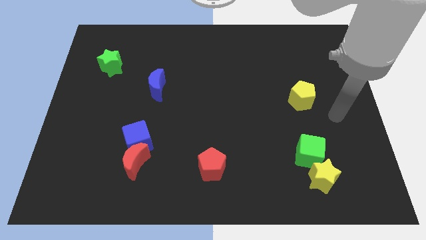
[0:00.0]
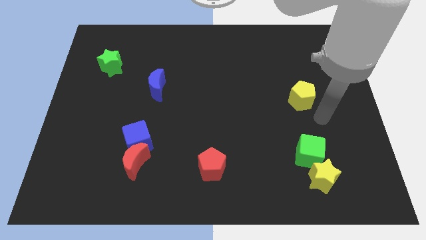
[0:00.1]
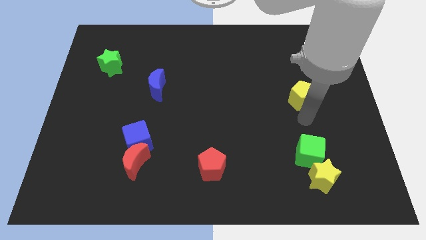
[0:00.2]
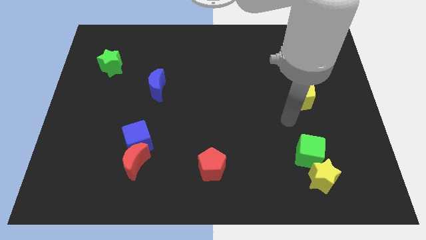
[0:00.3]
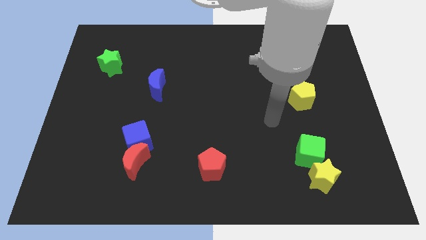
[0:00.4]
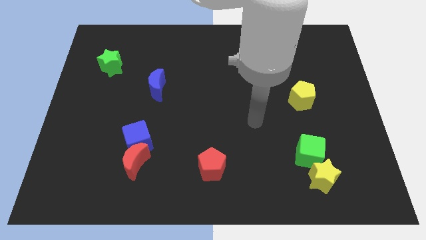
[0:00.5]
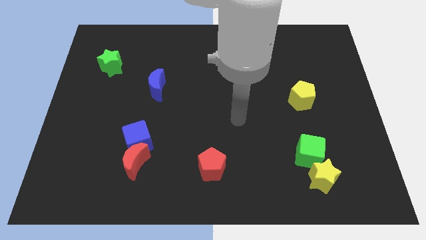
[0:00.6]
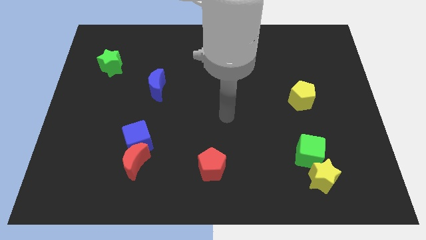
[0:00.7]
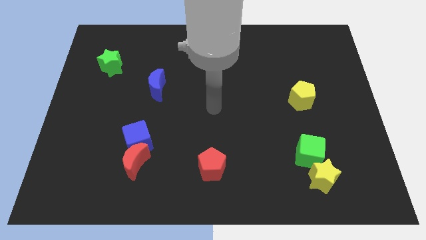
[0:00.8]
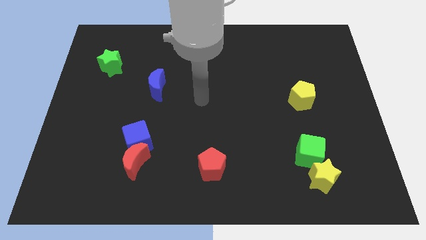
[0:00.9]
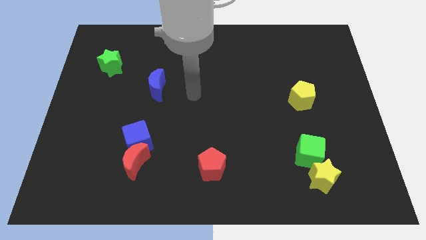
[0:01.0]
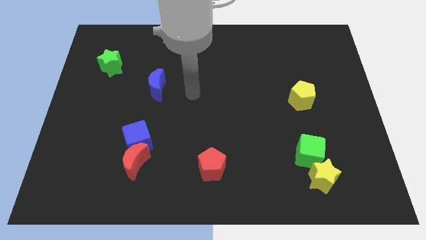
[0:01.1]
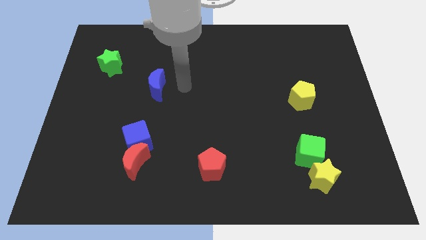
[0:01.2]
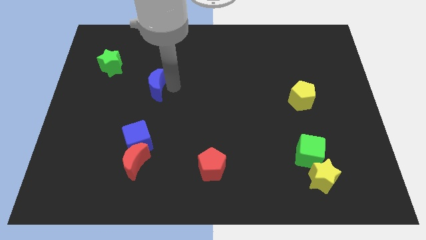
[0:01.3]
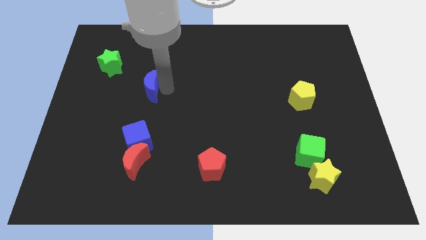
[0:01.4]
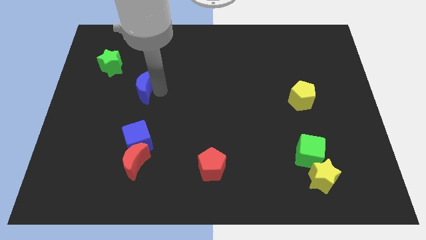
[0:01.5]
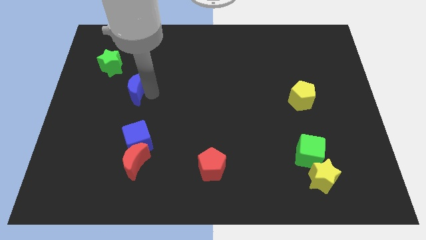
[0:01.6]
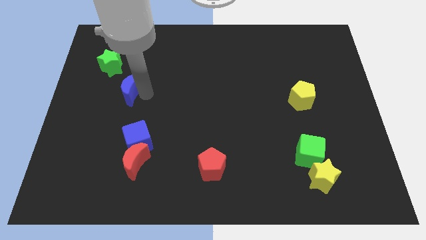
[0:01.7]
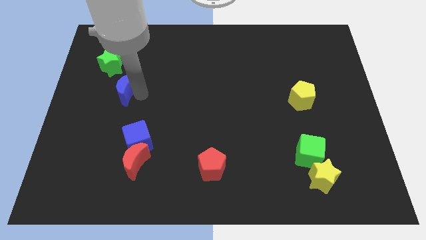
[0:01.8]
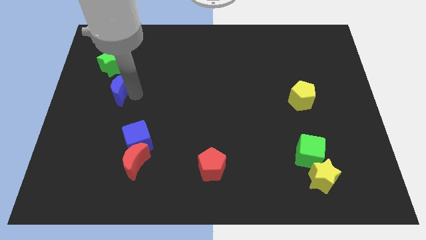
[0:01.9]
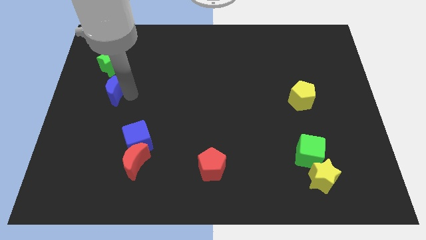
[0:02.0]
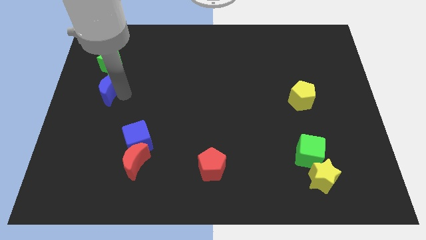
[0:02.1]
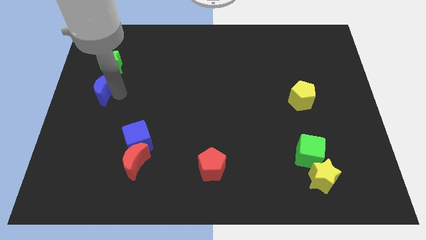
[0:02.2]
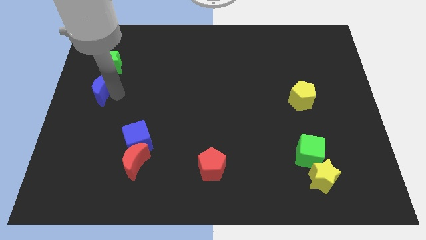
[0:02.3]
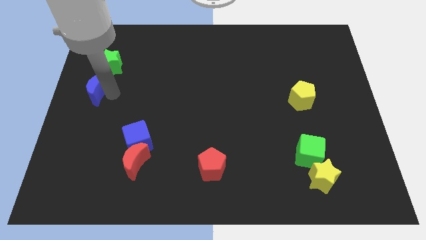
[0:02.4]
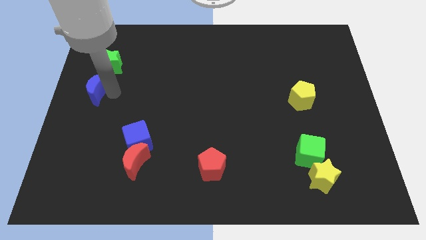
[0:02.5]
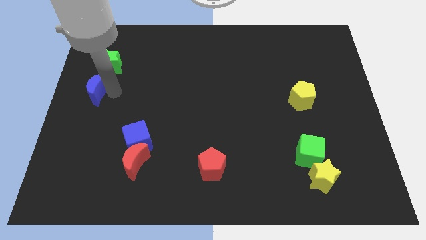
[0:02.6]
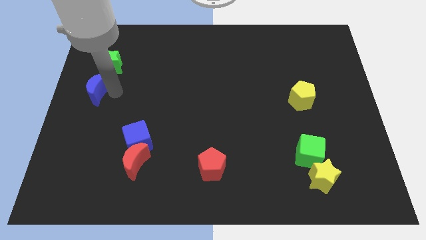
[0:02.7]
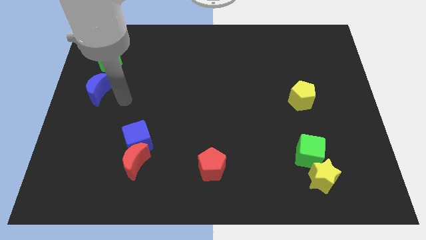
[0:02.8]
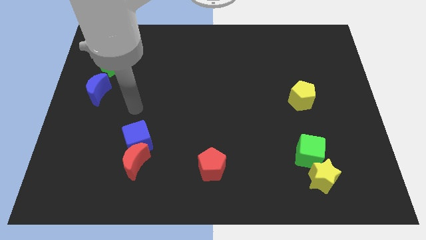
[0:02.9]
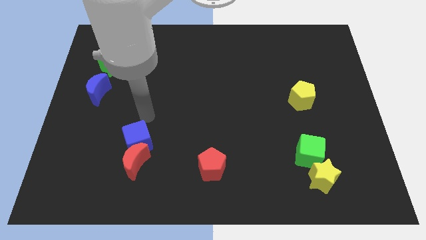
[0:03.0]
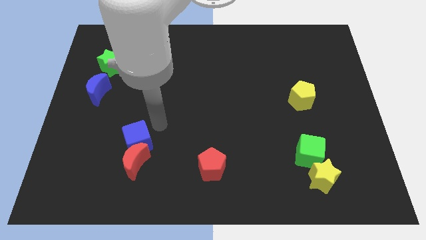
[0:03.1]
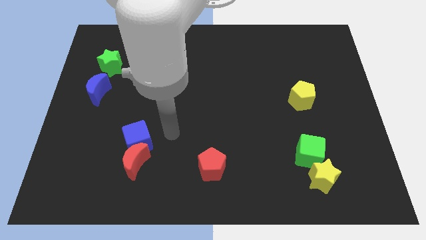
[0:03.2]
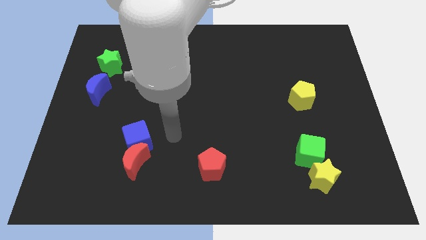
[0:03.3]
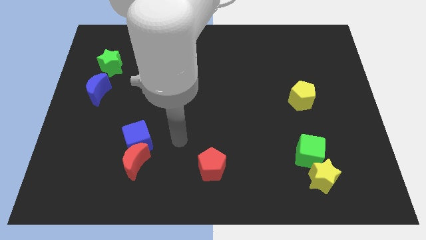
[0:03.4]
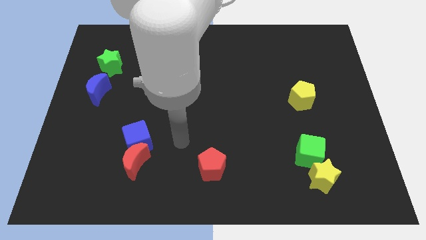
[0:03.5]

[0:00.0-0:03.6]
move blue moon below green star

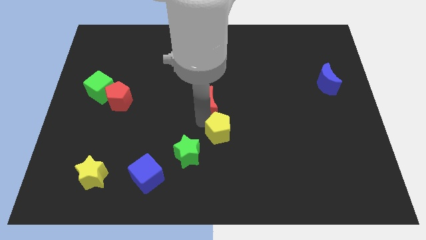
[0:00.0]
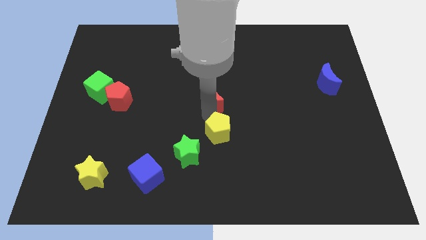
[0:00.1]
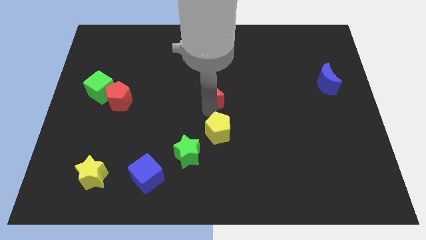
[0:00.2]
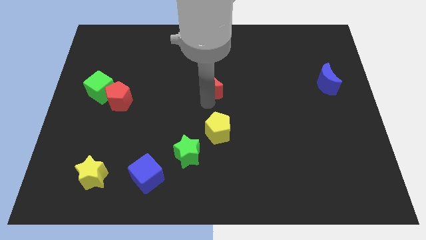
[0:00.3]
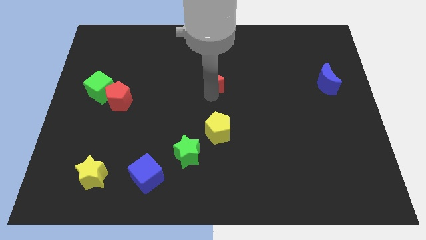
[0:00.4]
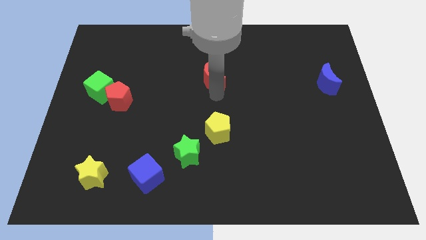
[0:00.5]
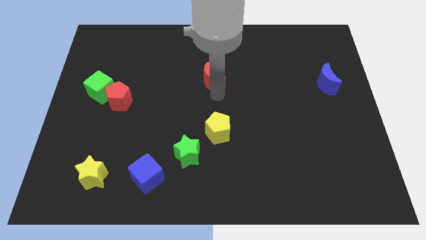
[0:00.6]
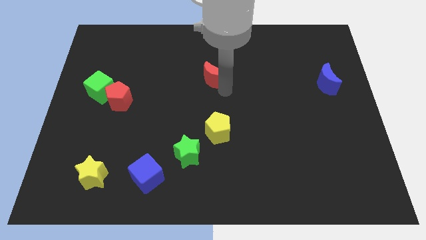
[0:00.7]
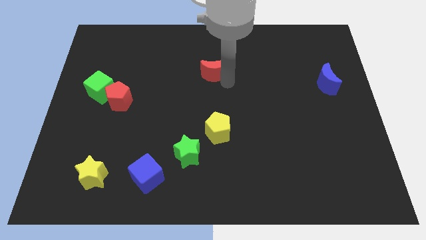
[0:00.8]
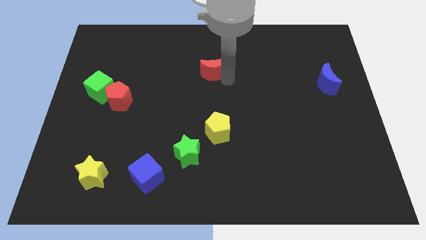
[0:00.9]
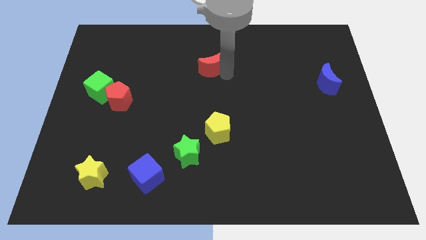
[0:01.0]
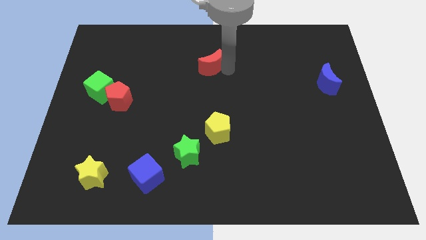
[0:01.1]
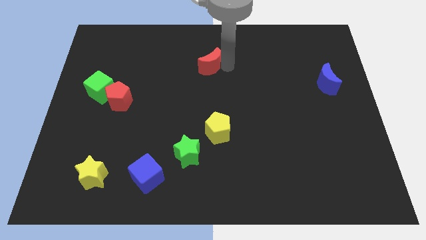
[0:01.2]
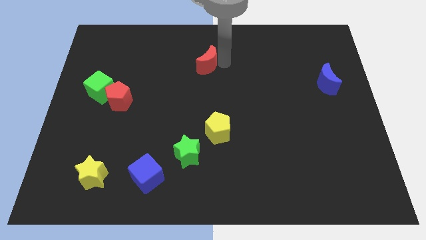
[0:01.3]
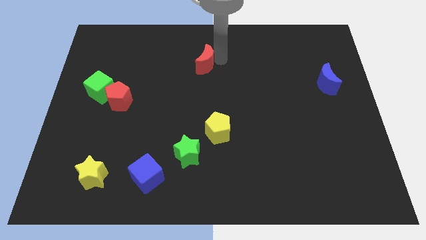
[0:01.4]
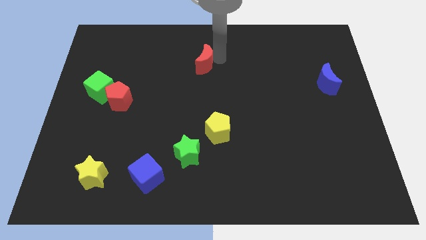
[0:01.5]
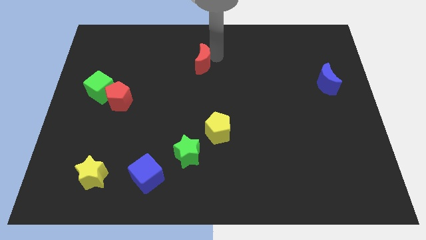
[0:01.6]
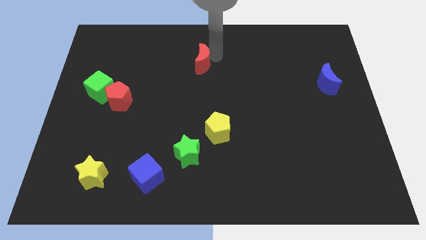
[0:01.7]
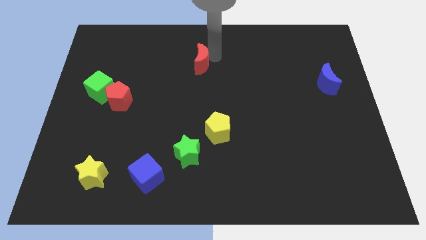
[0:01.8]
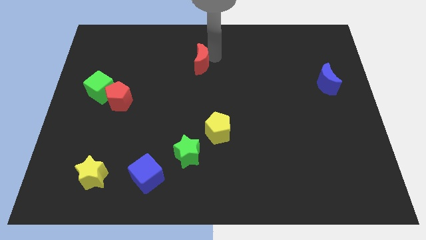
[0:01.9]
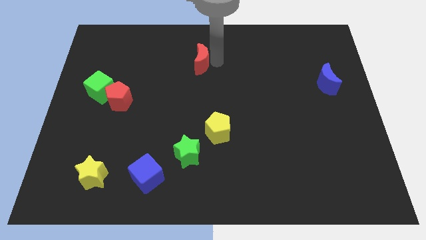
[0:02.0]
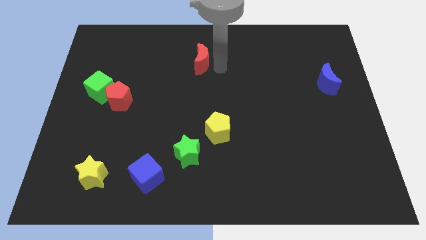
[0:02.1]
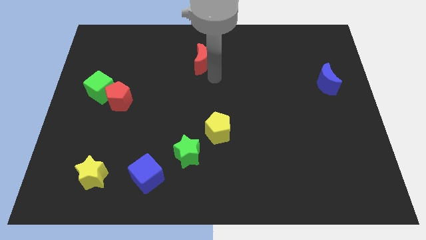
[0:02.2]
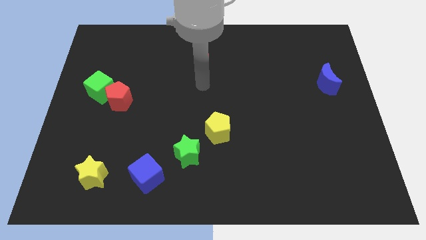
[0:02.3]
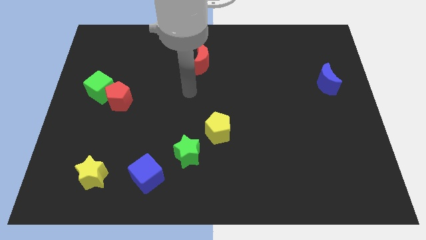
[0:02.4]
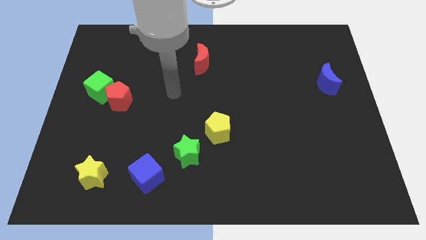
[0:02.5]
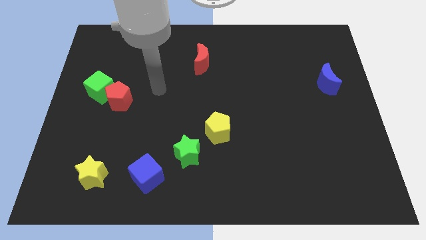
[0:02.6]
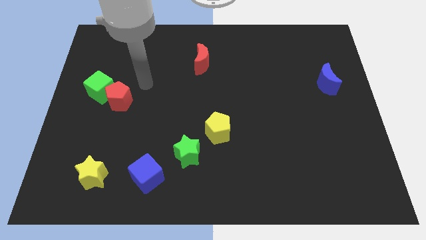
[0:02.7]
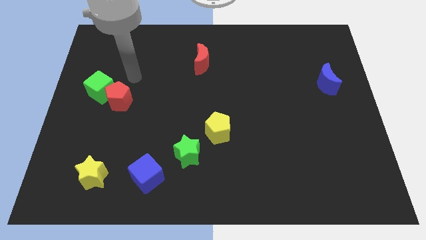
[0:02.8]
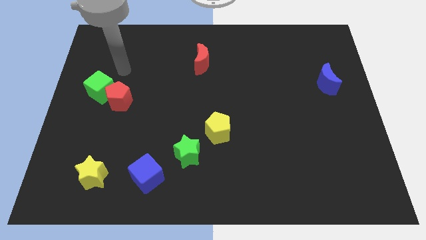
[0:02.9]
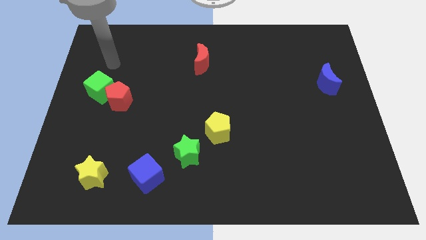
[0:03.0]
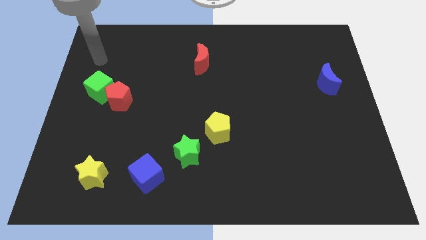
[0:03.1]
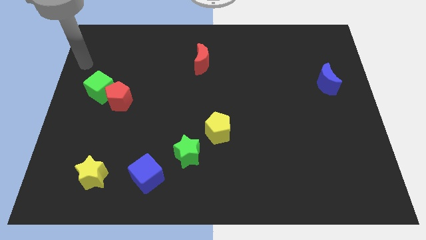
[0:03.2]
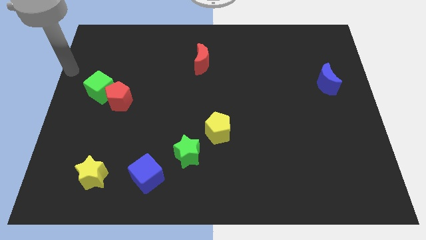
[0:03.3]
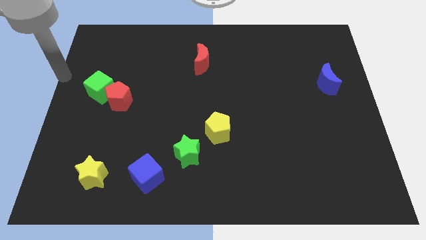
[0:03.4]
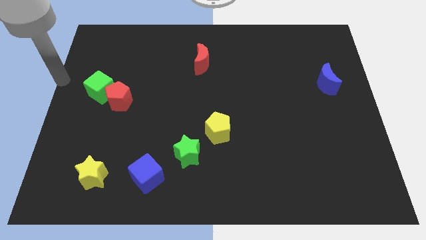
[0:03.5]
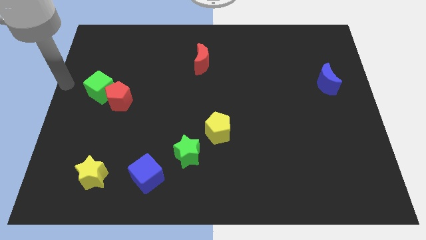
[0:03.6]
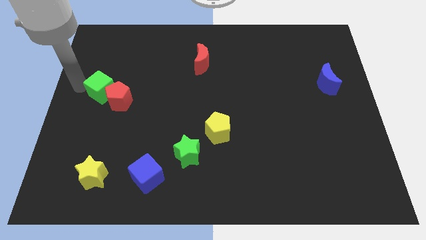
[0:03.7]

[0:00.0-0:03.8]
push the red crescent towards the top of the board

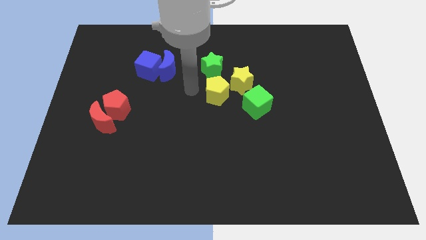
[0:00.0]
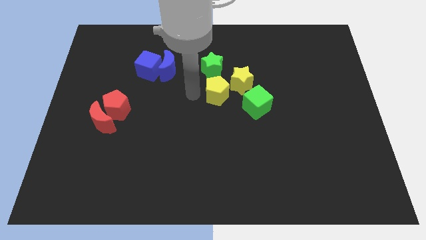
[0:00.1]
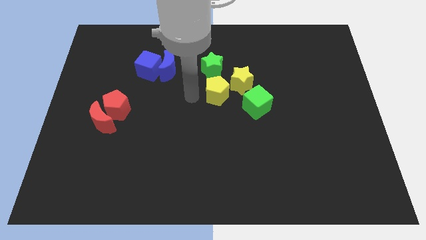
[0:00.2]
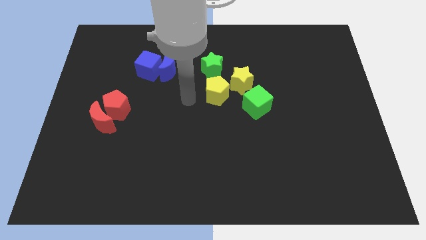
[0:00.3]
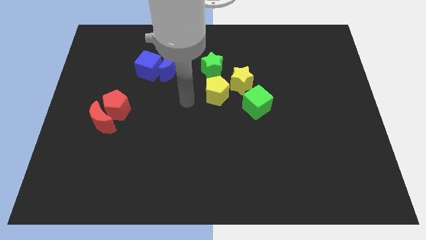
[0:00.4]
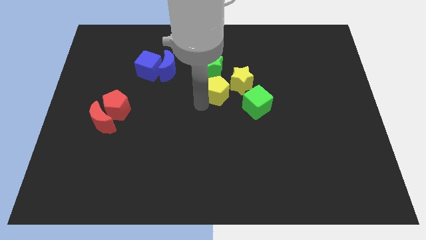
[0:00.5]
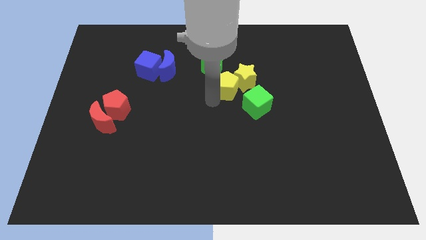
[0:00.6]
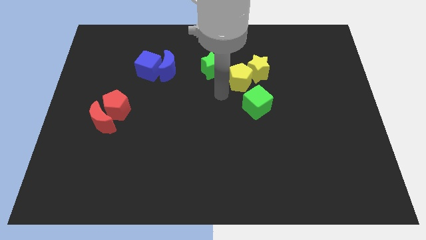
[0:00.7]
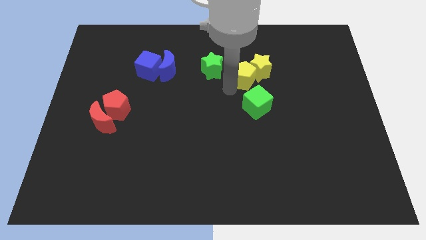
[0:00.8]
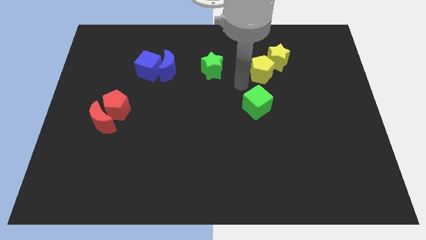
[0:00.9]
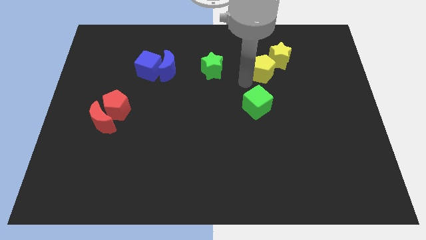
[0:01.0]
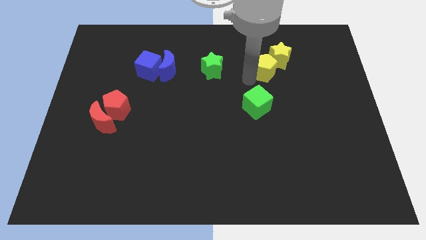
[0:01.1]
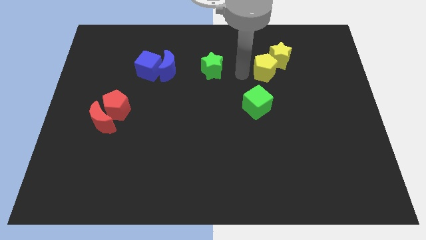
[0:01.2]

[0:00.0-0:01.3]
push yellow pentagon towards top right

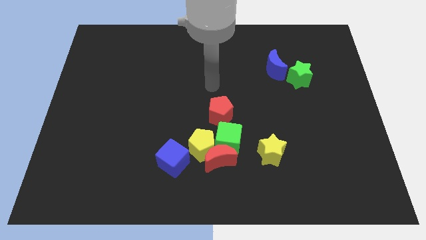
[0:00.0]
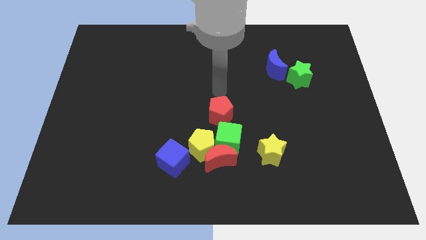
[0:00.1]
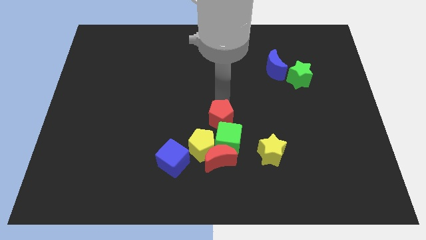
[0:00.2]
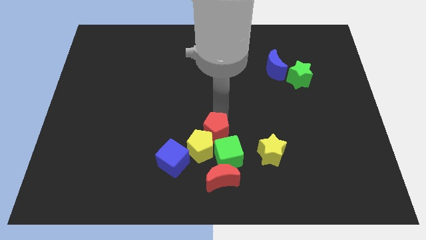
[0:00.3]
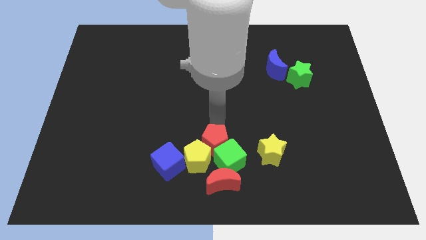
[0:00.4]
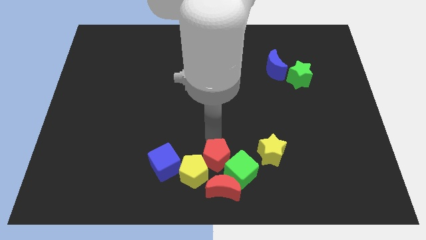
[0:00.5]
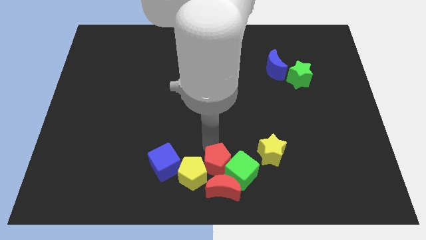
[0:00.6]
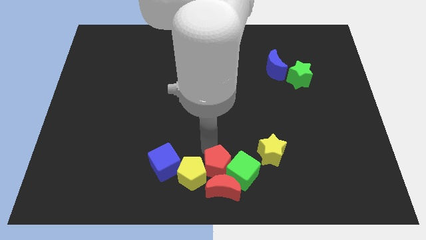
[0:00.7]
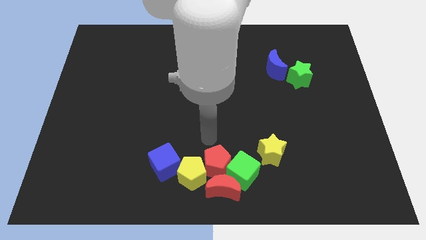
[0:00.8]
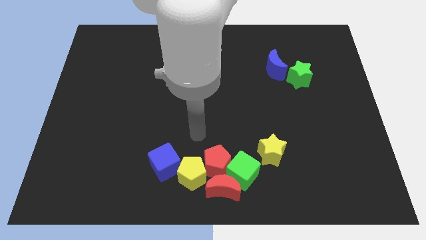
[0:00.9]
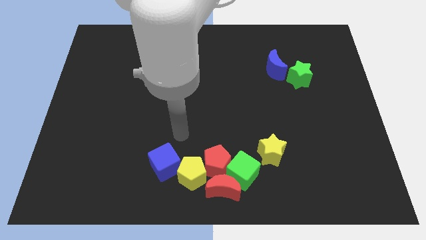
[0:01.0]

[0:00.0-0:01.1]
push group of blocks towards bottom center
